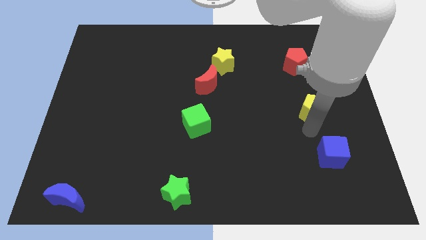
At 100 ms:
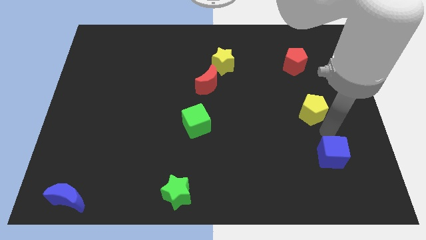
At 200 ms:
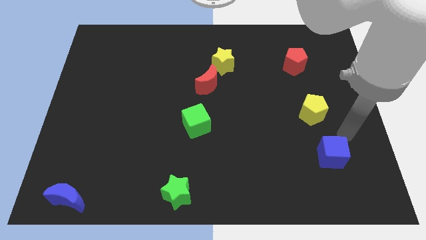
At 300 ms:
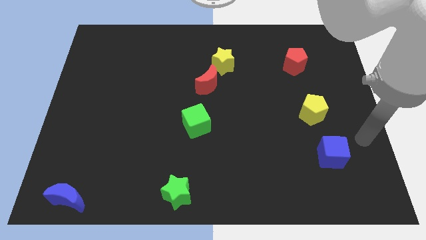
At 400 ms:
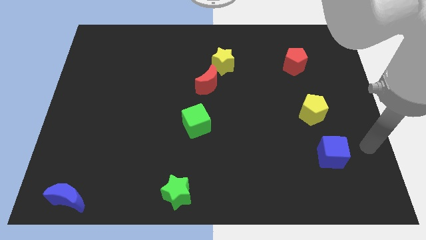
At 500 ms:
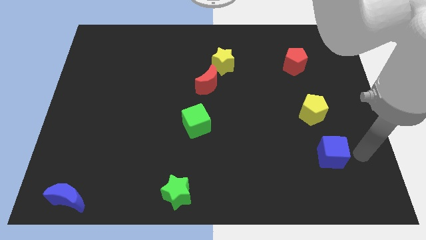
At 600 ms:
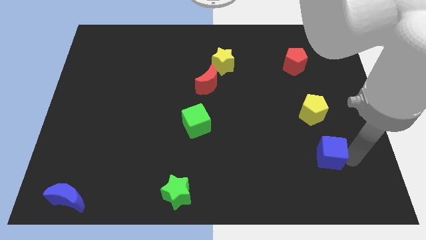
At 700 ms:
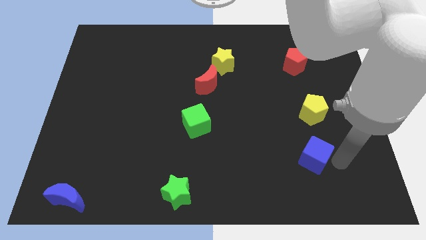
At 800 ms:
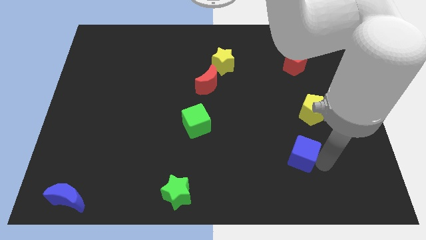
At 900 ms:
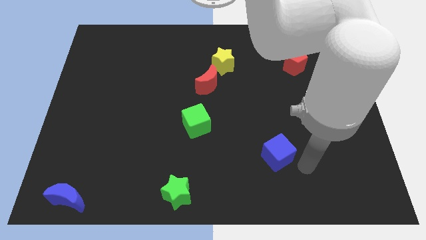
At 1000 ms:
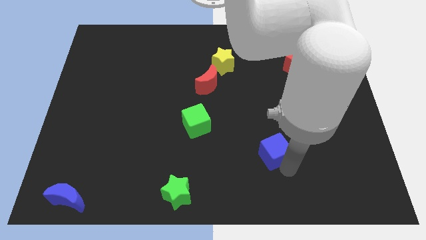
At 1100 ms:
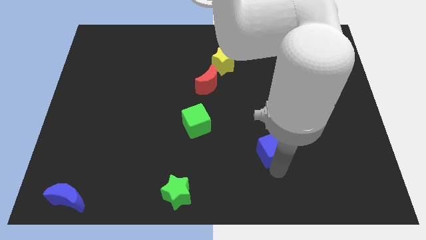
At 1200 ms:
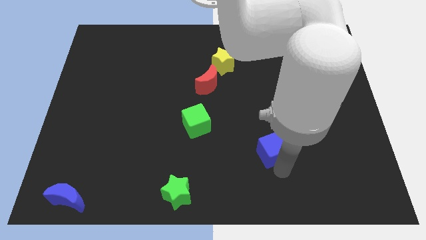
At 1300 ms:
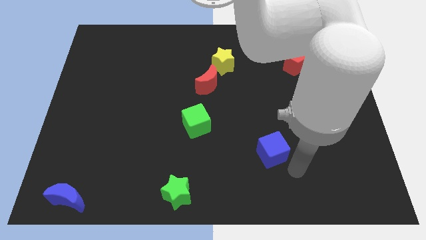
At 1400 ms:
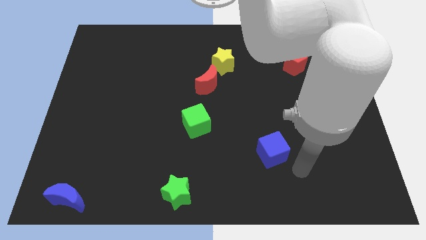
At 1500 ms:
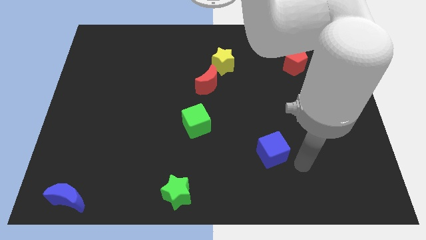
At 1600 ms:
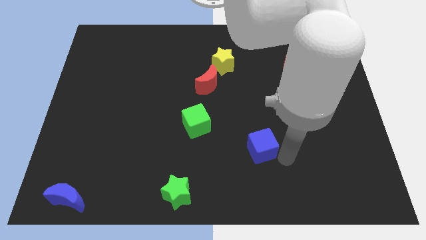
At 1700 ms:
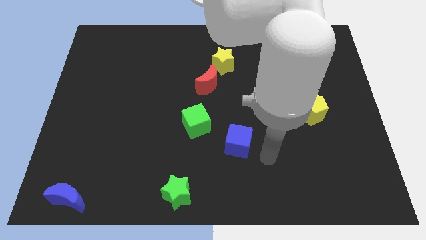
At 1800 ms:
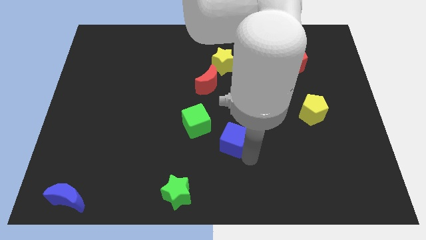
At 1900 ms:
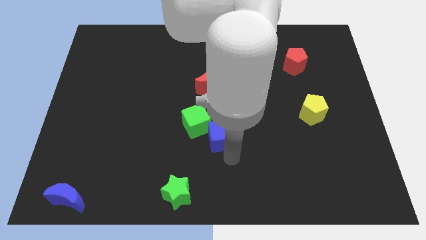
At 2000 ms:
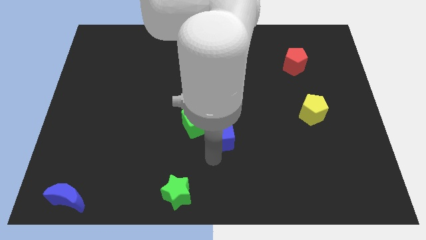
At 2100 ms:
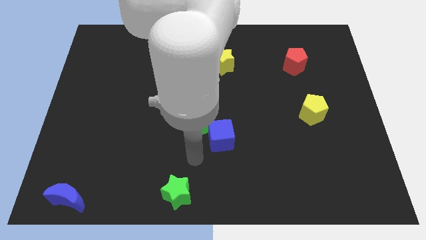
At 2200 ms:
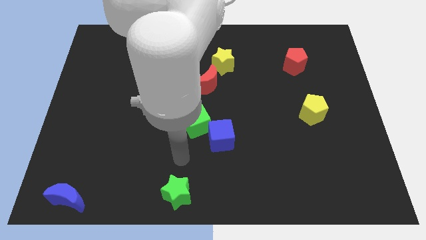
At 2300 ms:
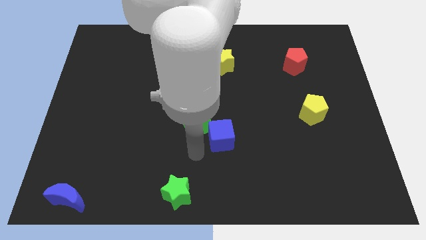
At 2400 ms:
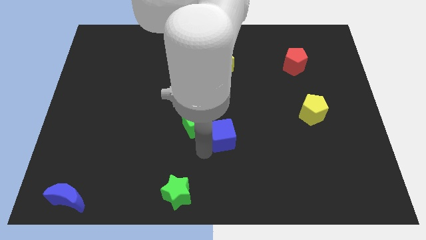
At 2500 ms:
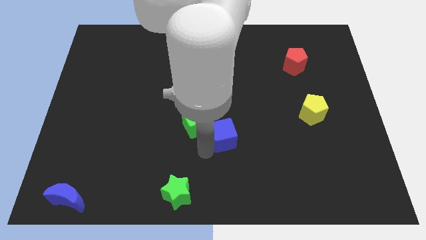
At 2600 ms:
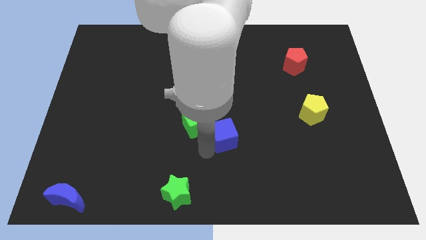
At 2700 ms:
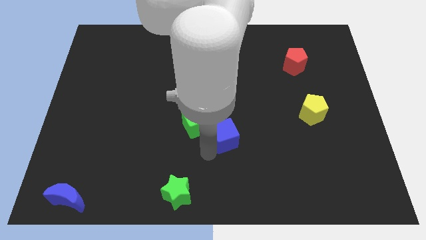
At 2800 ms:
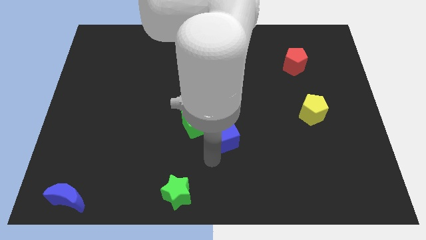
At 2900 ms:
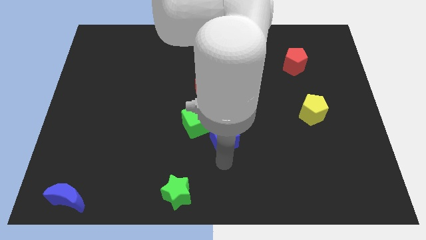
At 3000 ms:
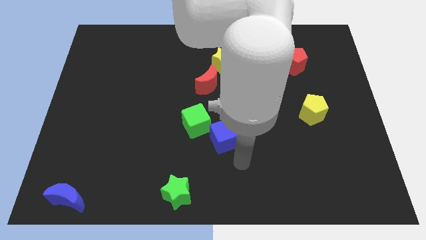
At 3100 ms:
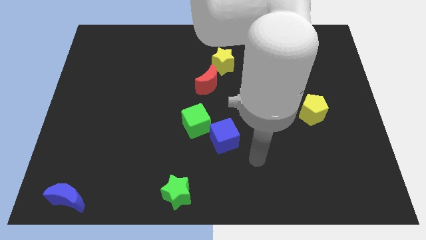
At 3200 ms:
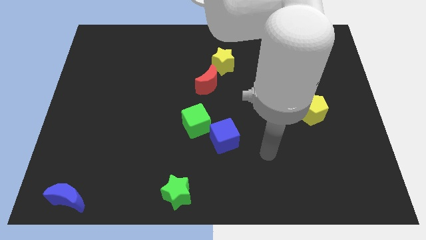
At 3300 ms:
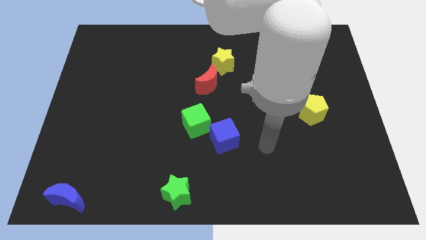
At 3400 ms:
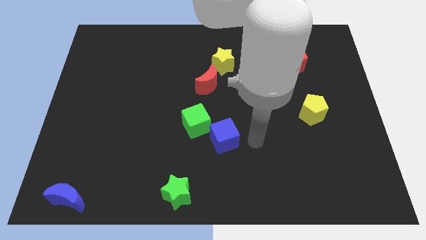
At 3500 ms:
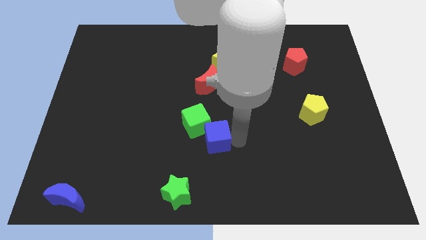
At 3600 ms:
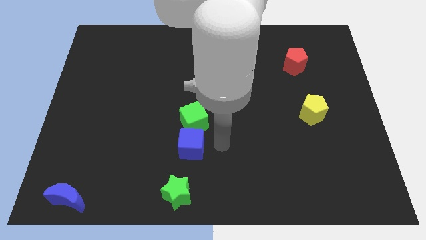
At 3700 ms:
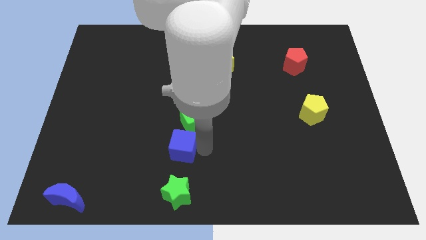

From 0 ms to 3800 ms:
place the blue cube below the green cube

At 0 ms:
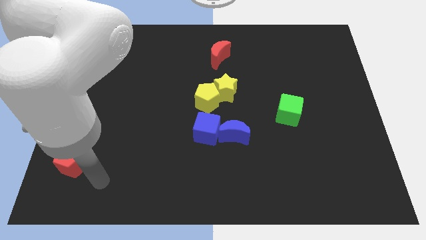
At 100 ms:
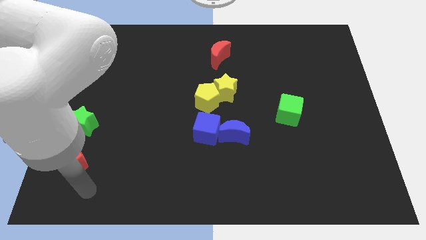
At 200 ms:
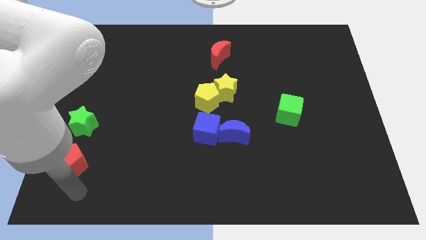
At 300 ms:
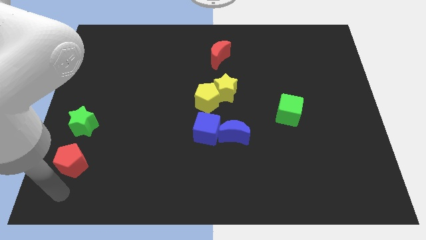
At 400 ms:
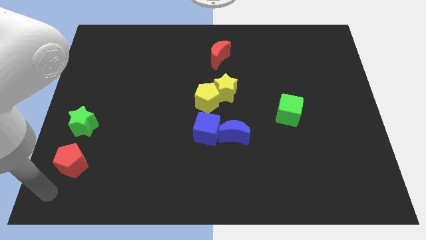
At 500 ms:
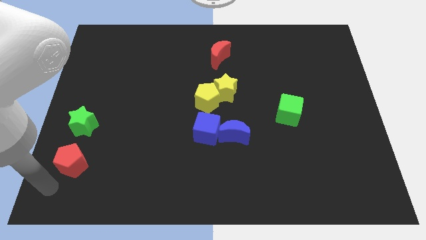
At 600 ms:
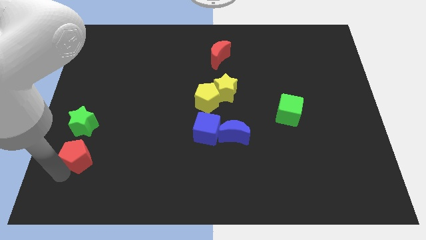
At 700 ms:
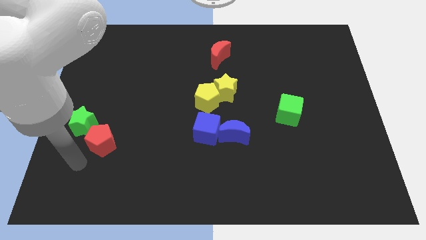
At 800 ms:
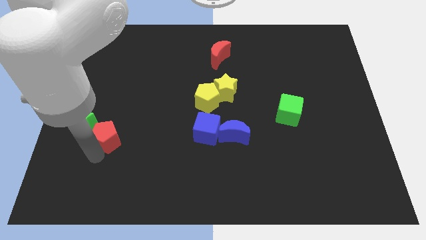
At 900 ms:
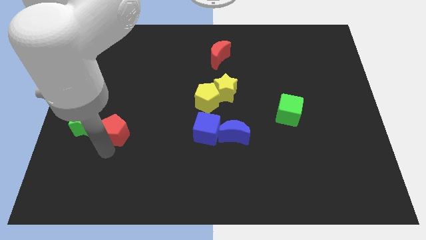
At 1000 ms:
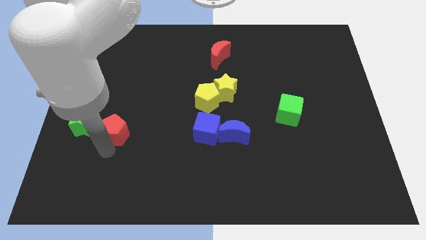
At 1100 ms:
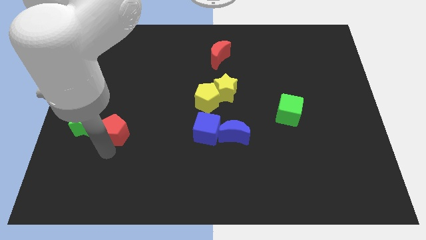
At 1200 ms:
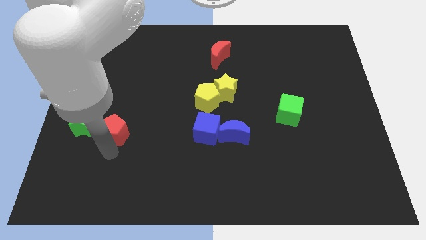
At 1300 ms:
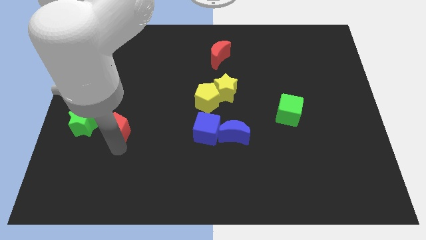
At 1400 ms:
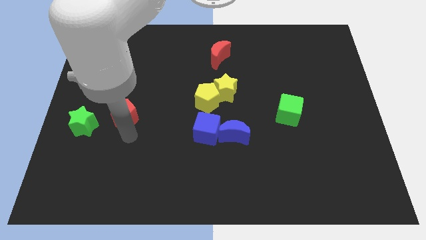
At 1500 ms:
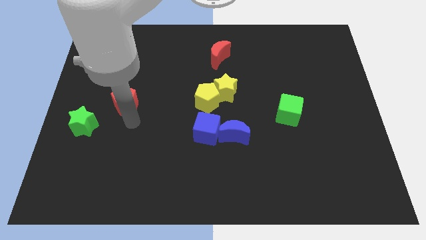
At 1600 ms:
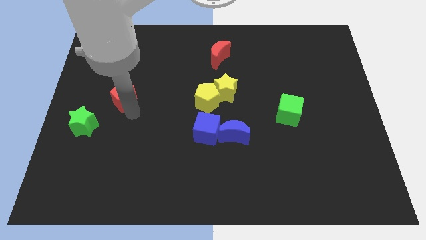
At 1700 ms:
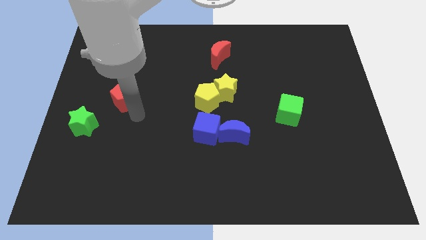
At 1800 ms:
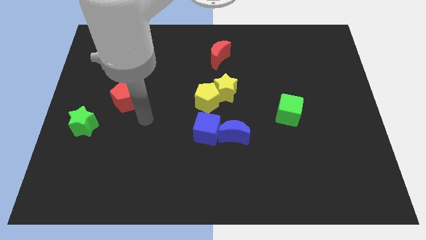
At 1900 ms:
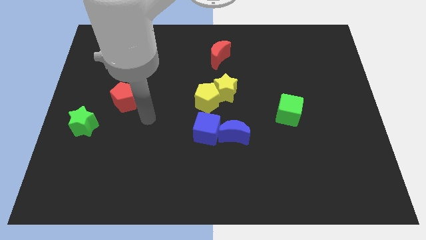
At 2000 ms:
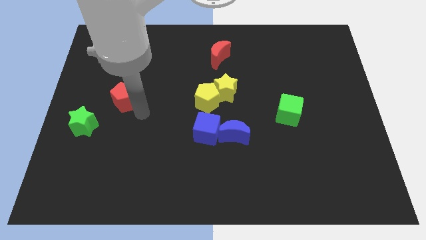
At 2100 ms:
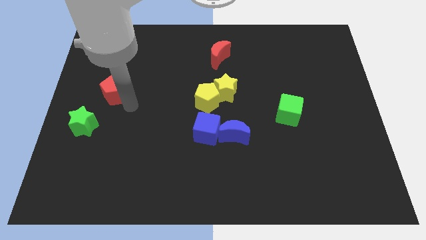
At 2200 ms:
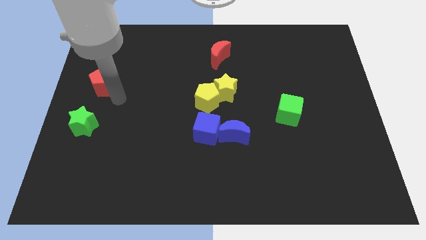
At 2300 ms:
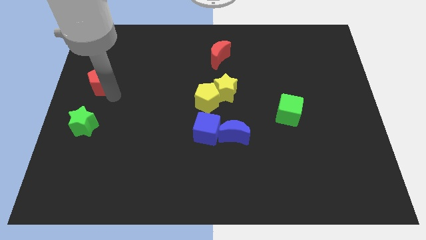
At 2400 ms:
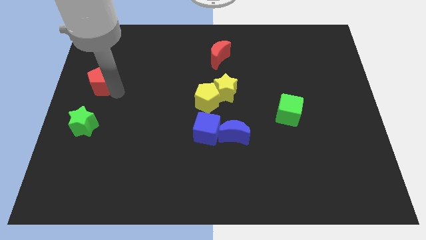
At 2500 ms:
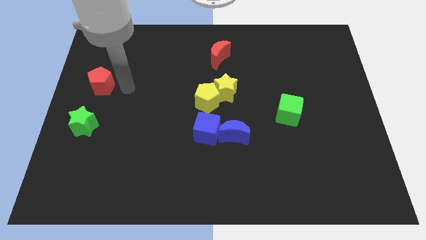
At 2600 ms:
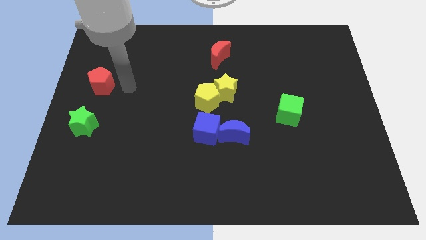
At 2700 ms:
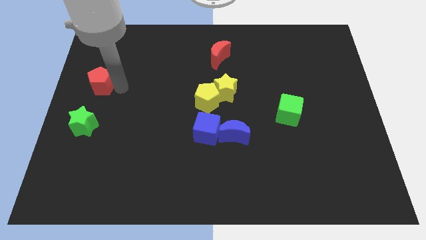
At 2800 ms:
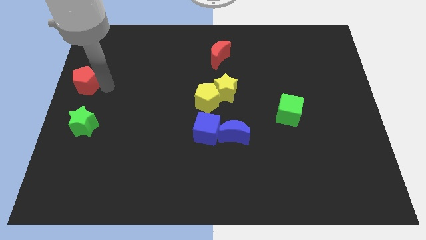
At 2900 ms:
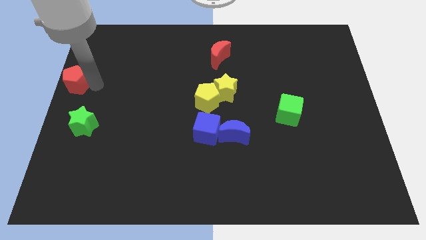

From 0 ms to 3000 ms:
place the red pentagon on top of green star

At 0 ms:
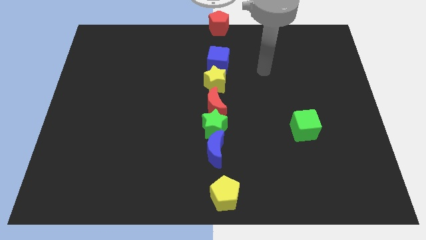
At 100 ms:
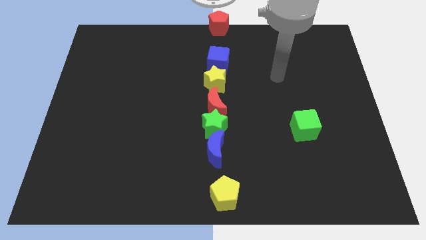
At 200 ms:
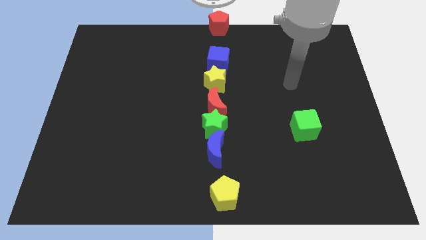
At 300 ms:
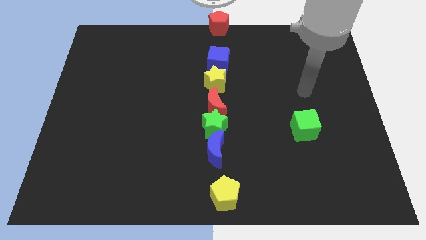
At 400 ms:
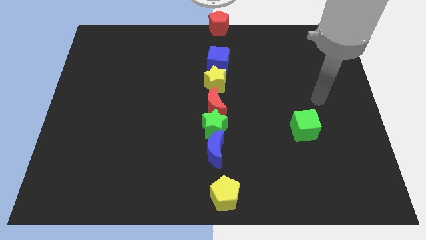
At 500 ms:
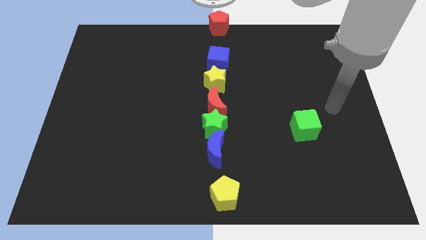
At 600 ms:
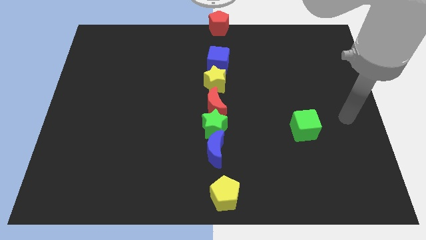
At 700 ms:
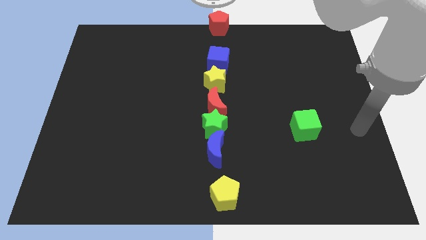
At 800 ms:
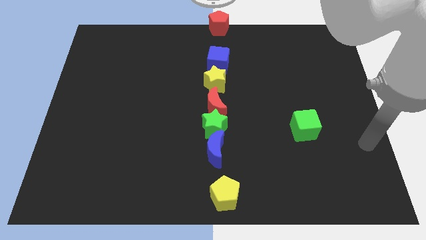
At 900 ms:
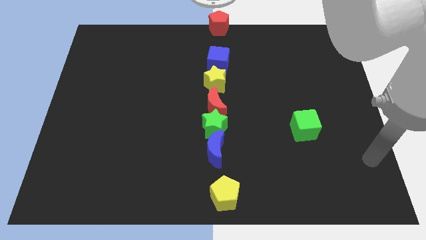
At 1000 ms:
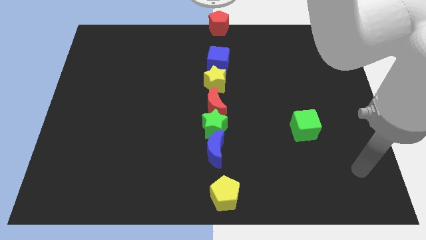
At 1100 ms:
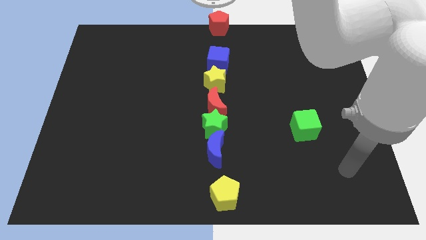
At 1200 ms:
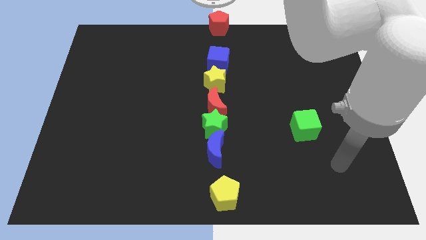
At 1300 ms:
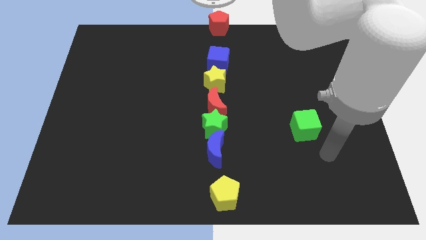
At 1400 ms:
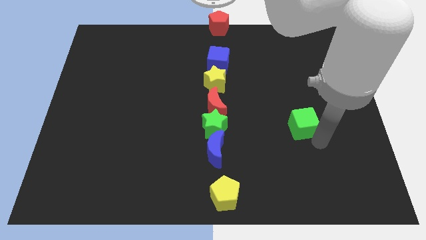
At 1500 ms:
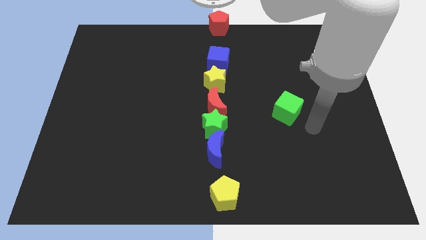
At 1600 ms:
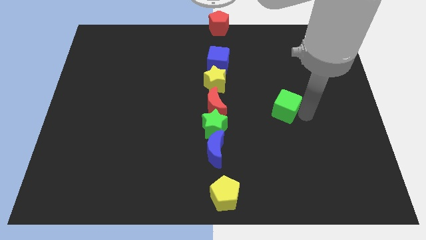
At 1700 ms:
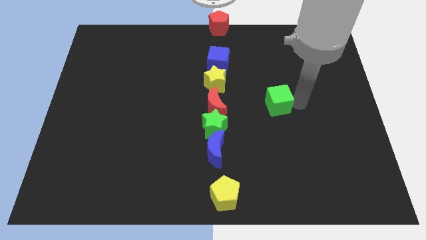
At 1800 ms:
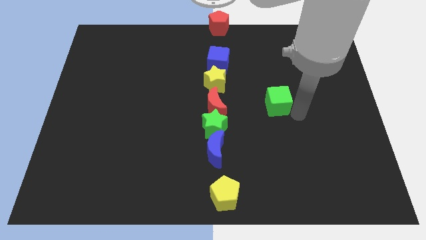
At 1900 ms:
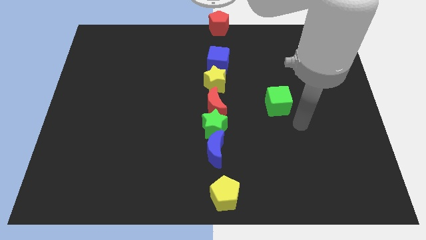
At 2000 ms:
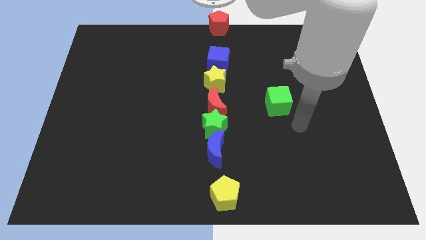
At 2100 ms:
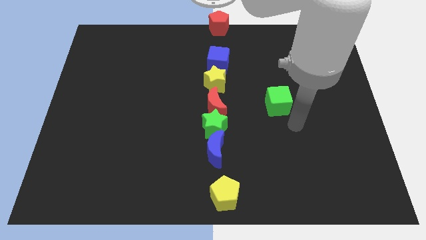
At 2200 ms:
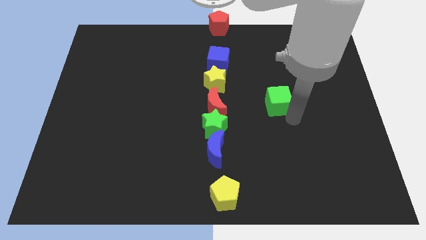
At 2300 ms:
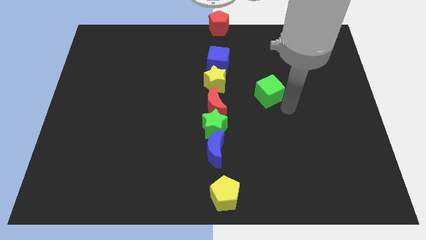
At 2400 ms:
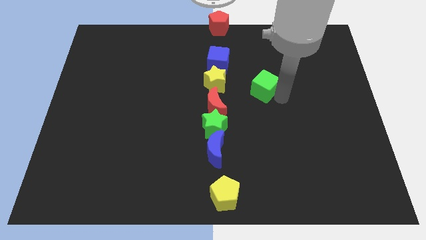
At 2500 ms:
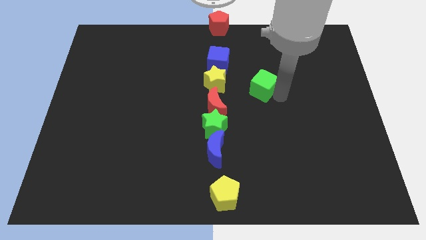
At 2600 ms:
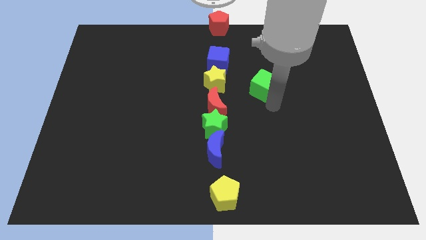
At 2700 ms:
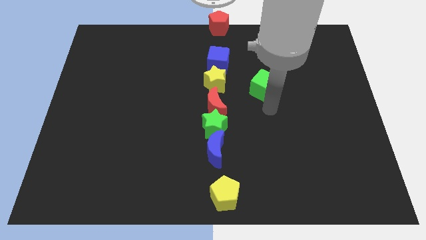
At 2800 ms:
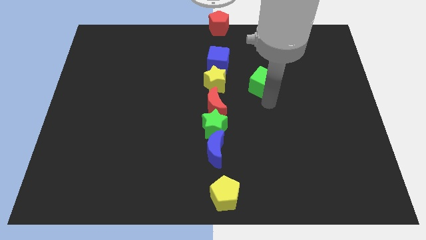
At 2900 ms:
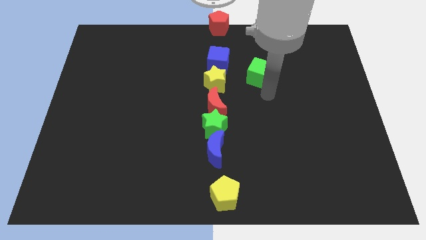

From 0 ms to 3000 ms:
move the green cube diagonal top right yellow star
